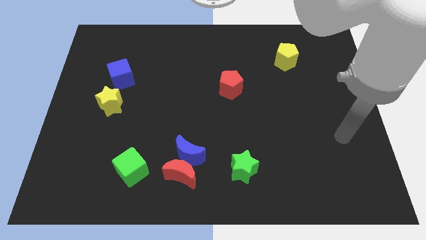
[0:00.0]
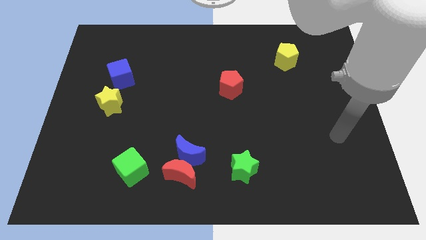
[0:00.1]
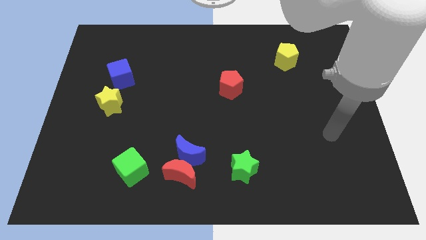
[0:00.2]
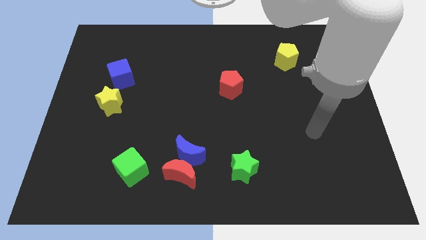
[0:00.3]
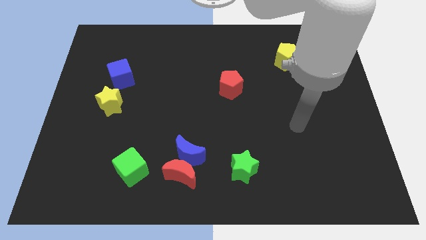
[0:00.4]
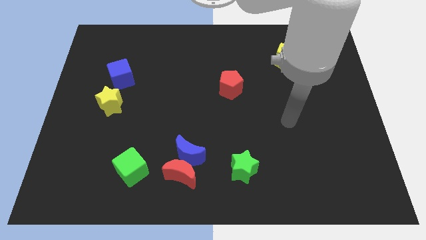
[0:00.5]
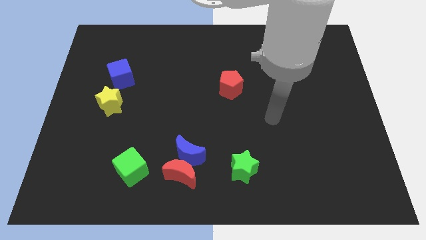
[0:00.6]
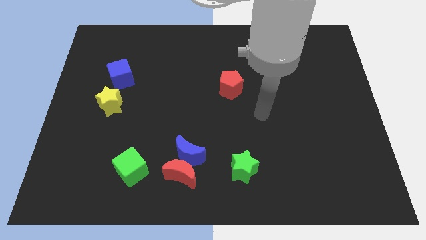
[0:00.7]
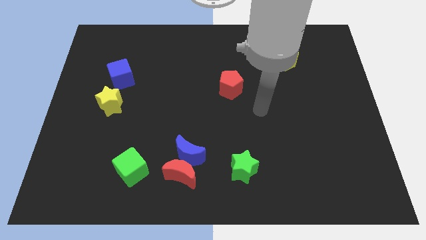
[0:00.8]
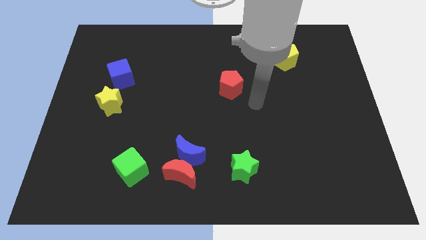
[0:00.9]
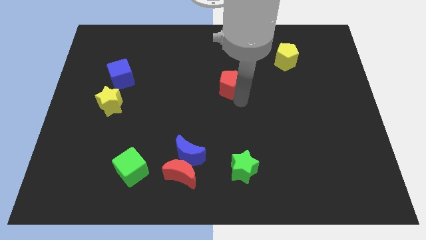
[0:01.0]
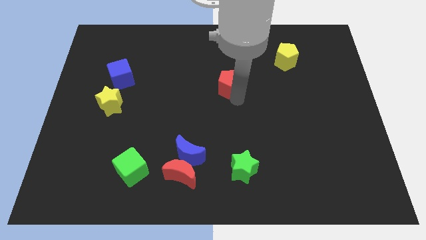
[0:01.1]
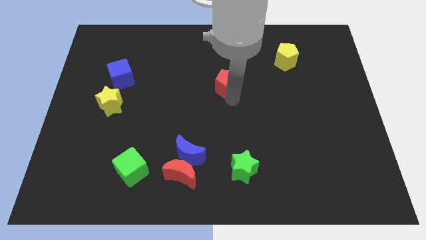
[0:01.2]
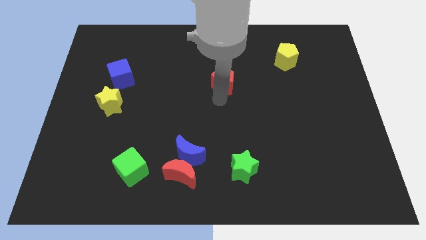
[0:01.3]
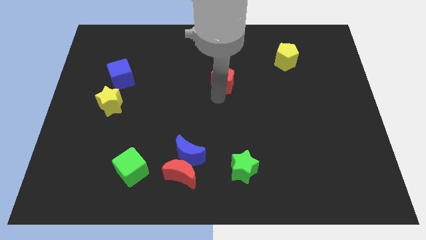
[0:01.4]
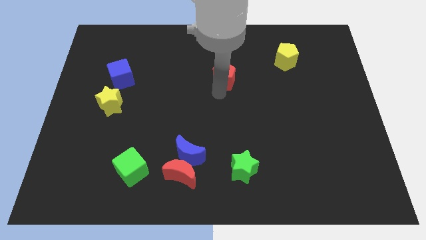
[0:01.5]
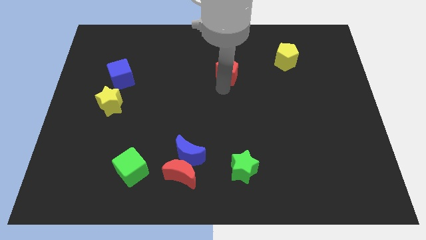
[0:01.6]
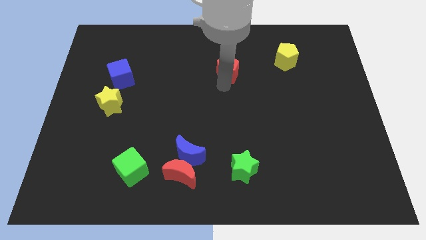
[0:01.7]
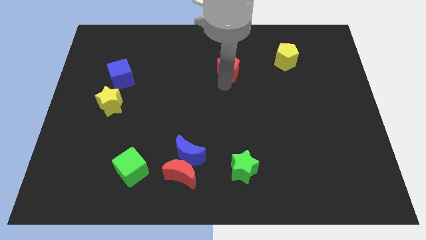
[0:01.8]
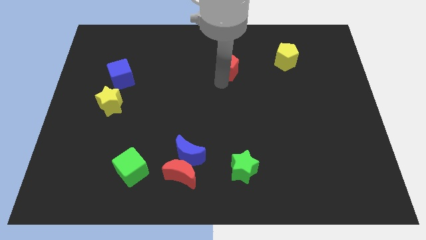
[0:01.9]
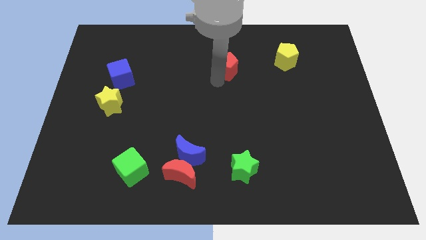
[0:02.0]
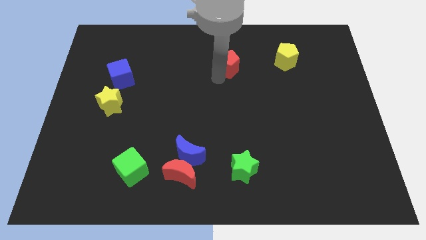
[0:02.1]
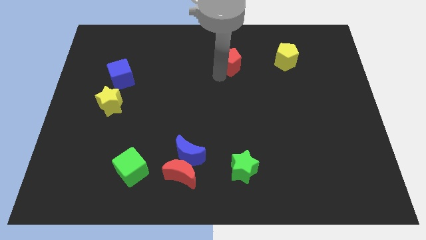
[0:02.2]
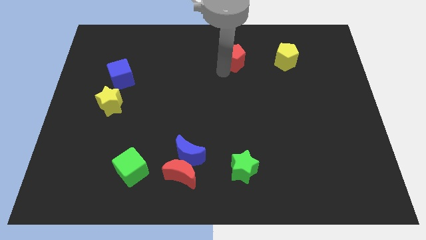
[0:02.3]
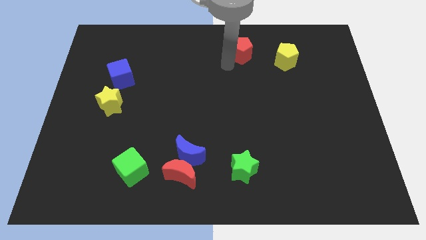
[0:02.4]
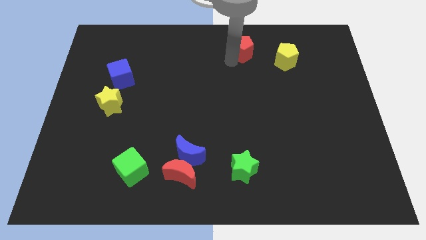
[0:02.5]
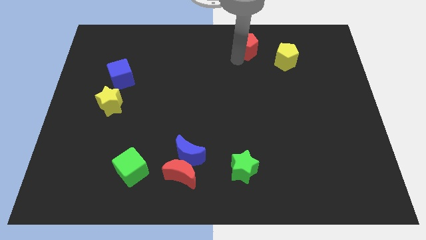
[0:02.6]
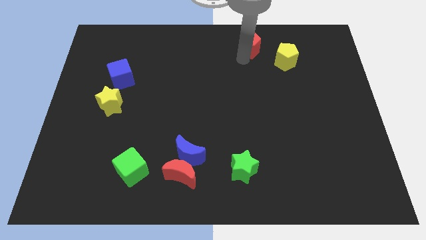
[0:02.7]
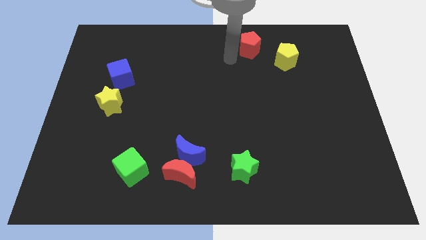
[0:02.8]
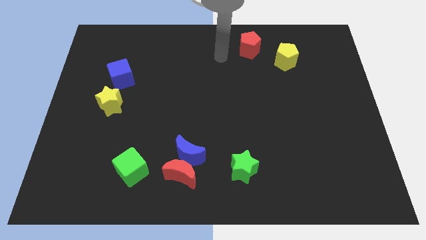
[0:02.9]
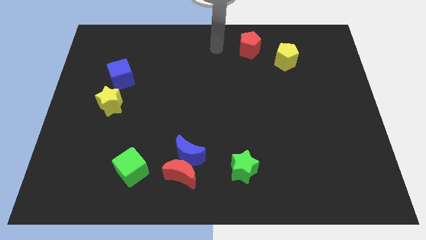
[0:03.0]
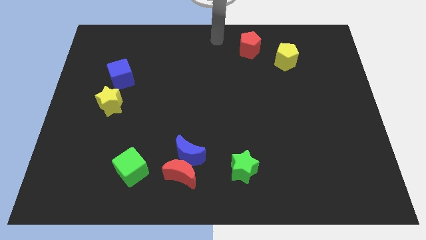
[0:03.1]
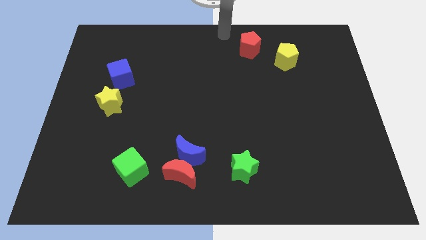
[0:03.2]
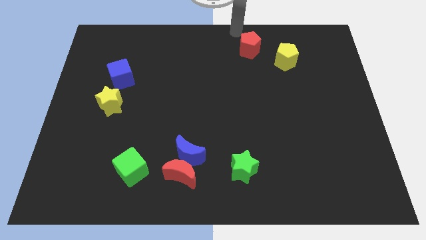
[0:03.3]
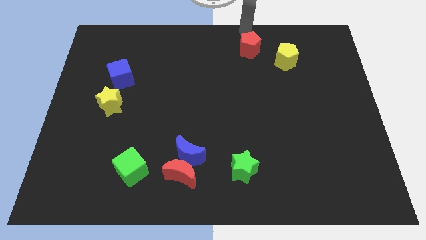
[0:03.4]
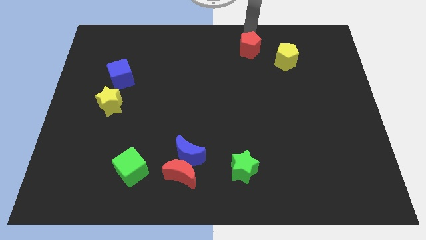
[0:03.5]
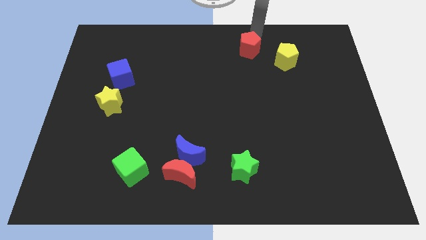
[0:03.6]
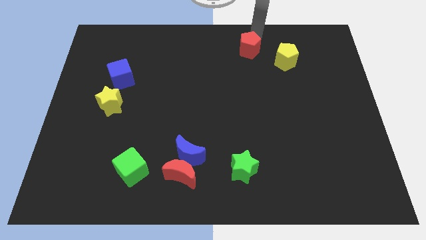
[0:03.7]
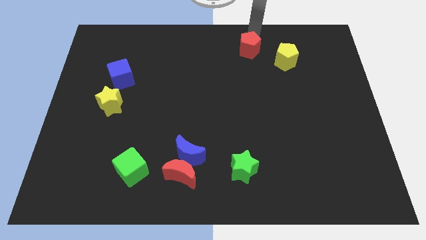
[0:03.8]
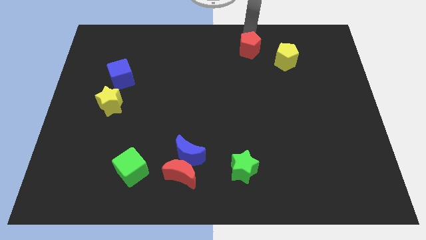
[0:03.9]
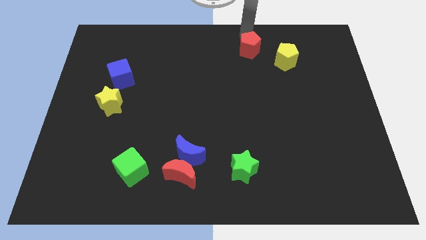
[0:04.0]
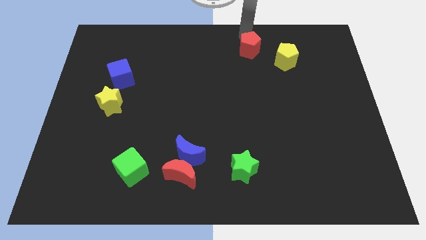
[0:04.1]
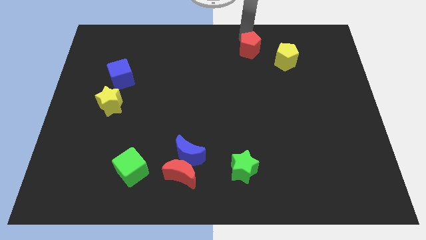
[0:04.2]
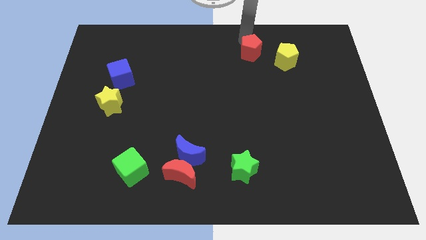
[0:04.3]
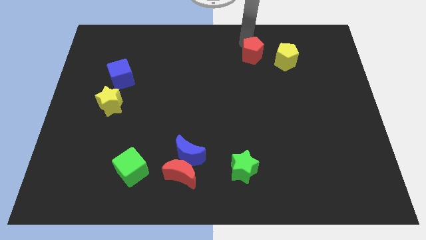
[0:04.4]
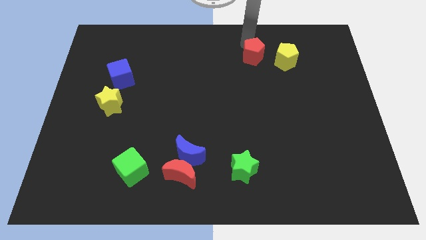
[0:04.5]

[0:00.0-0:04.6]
place the red pentagon to the left of yellow pentagon

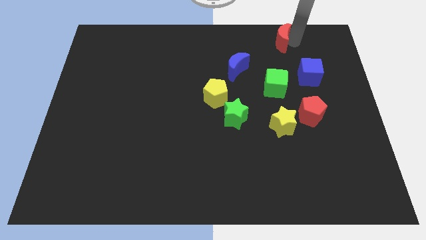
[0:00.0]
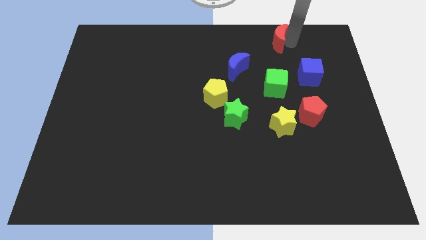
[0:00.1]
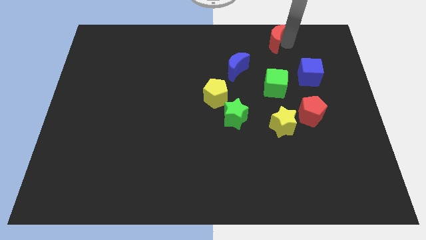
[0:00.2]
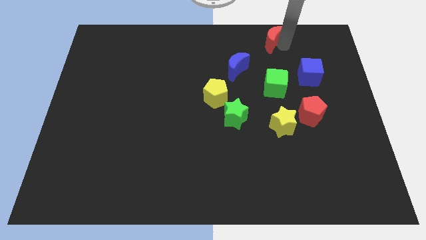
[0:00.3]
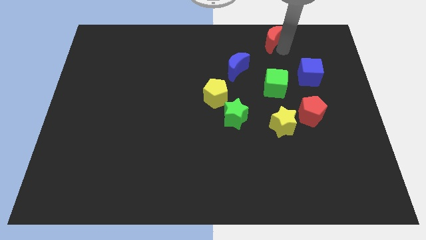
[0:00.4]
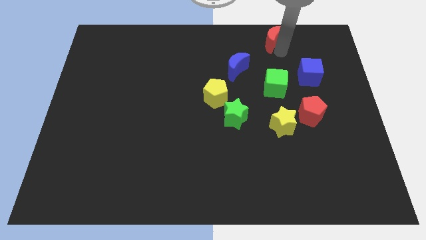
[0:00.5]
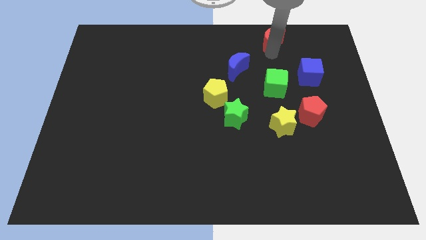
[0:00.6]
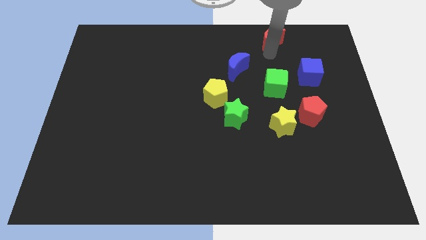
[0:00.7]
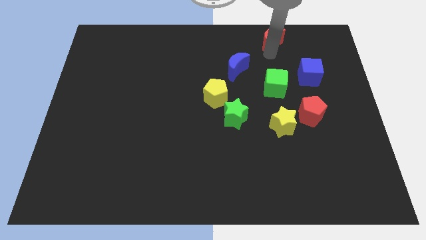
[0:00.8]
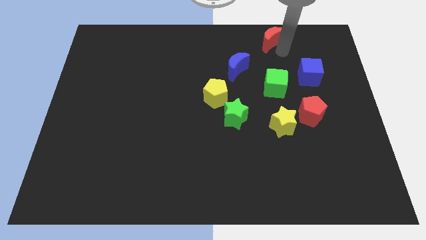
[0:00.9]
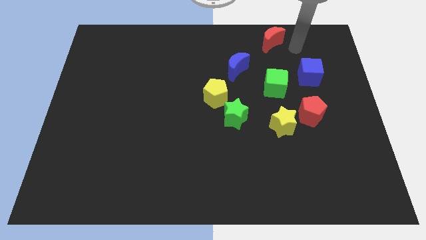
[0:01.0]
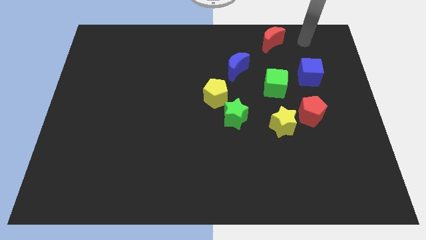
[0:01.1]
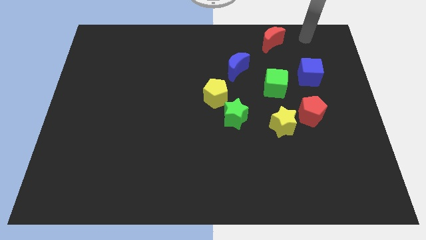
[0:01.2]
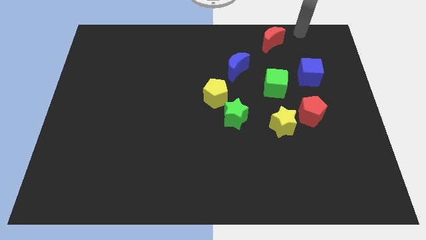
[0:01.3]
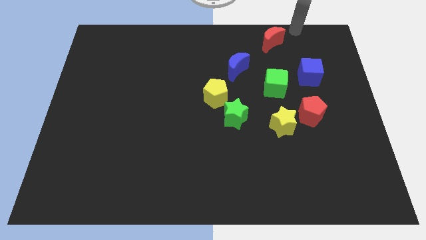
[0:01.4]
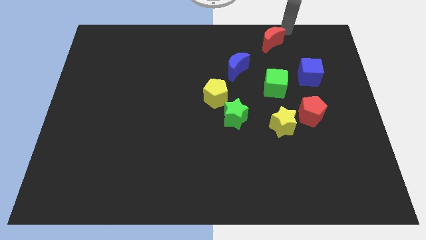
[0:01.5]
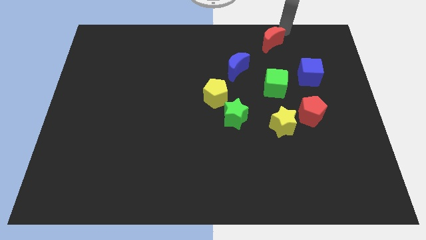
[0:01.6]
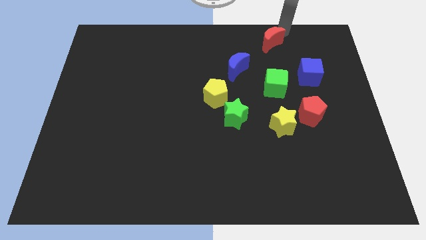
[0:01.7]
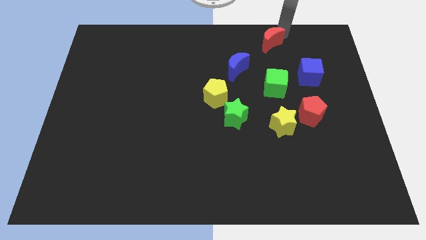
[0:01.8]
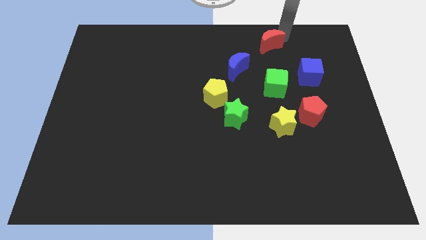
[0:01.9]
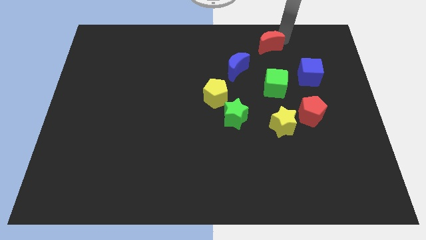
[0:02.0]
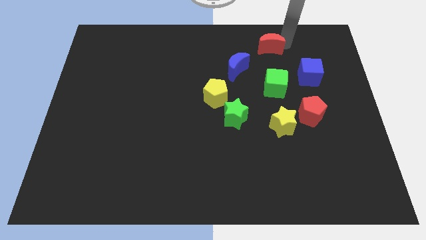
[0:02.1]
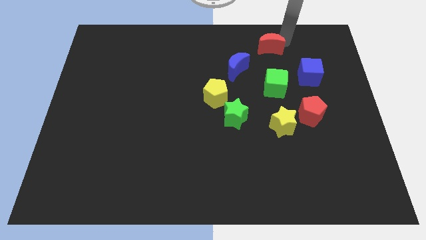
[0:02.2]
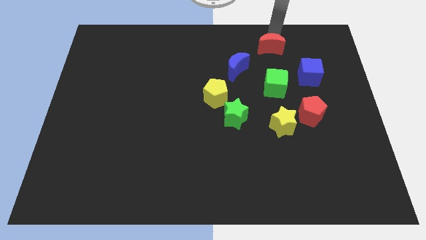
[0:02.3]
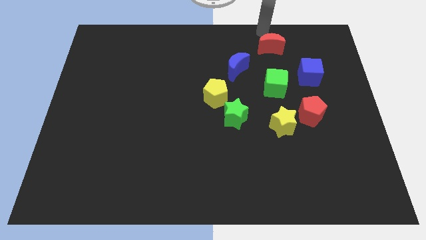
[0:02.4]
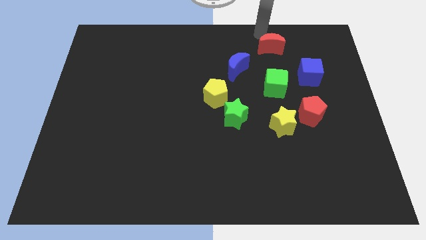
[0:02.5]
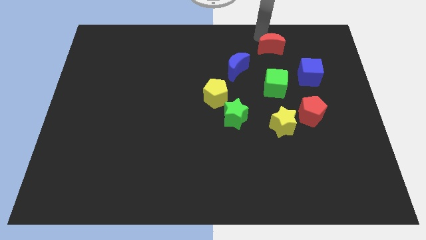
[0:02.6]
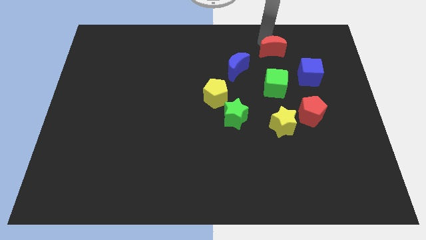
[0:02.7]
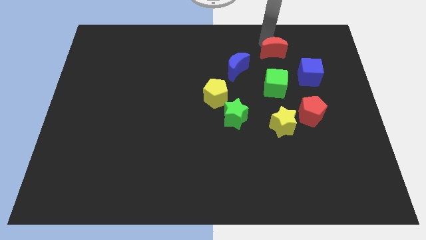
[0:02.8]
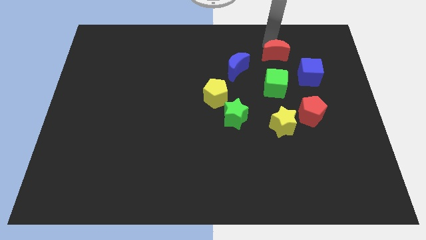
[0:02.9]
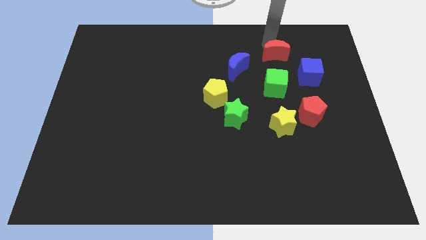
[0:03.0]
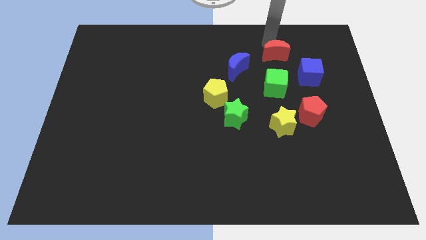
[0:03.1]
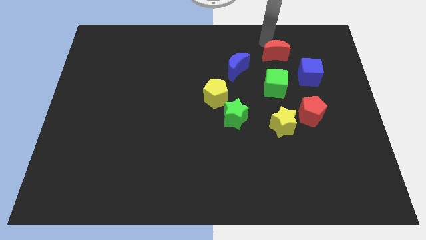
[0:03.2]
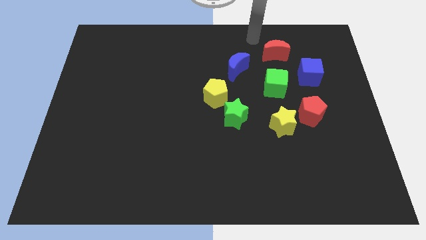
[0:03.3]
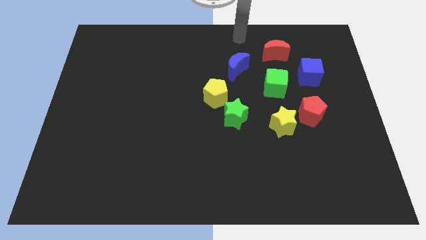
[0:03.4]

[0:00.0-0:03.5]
place the red moon diagonally top right to blue moon

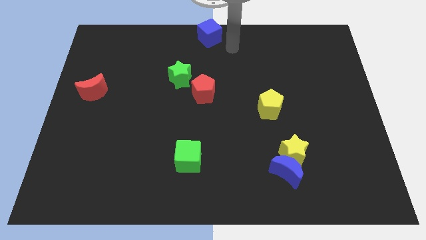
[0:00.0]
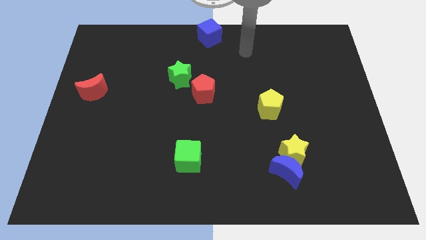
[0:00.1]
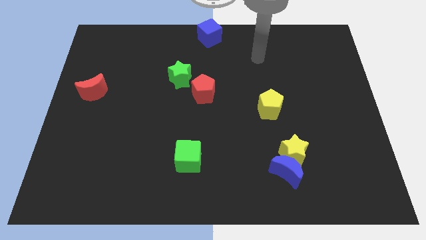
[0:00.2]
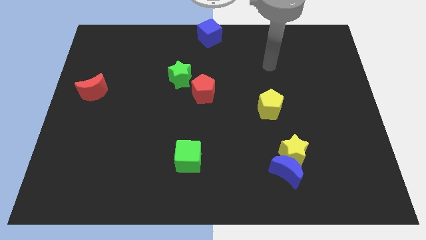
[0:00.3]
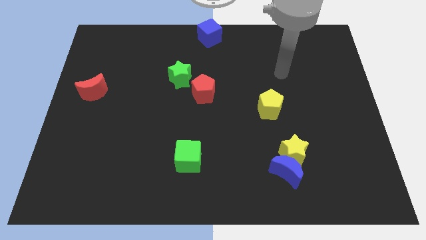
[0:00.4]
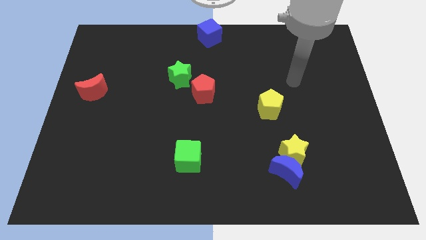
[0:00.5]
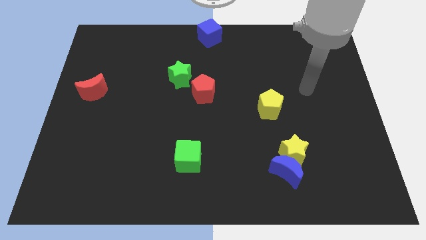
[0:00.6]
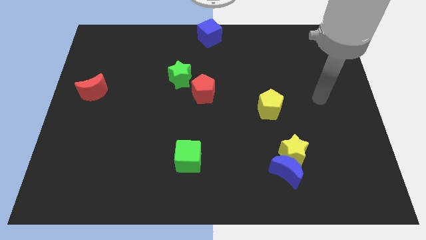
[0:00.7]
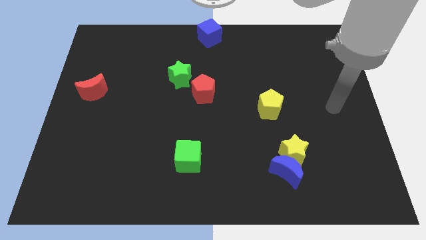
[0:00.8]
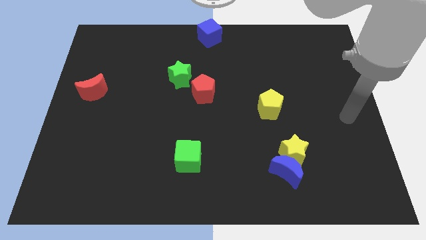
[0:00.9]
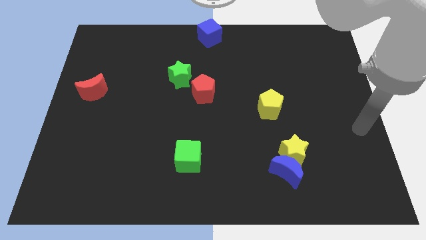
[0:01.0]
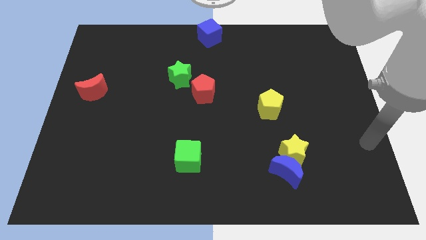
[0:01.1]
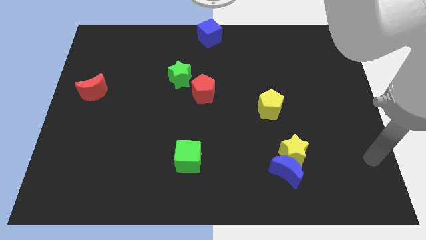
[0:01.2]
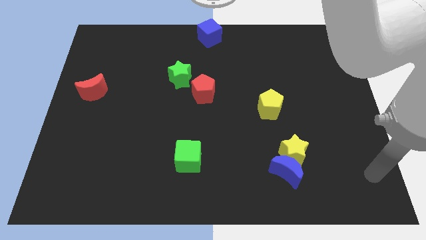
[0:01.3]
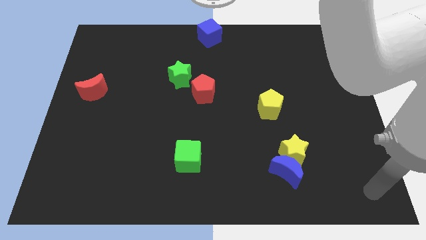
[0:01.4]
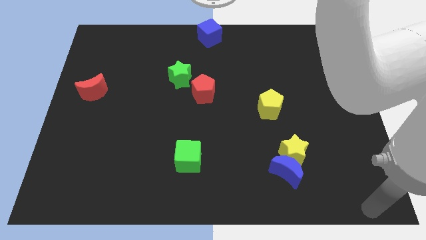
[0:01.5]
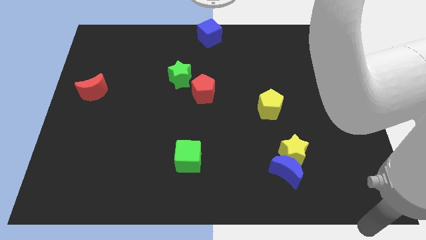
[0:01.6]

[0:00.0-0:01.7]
place your arm to the bottom right corner of the board
